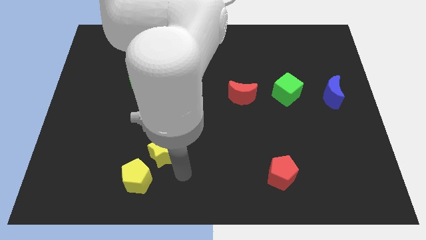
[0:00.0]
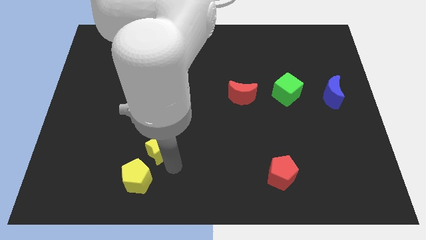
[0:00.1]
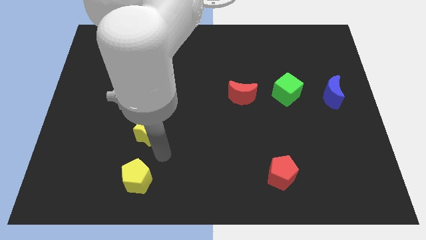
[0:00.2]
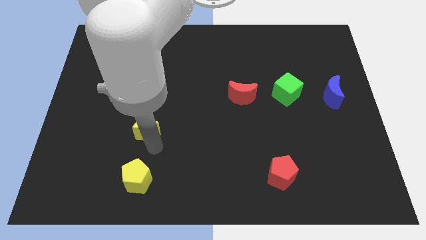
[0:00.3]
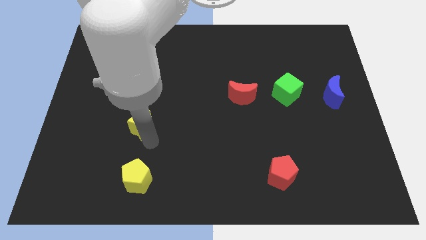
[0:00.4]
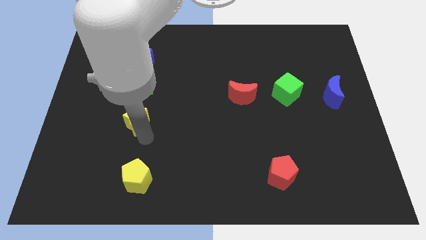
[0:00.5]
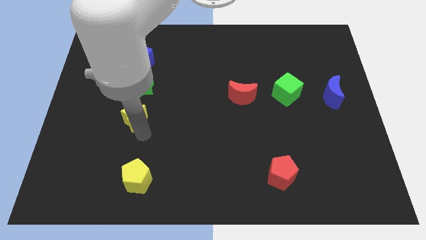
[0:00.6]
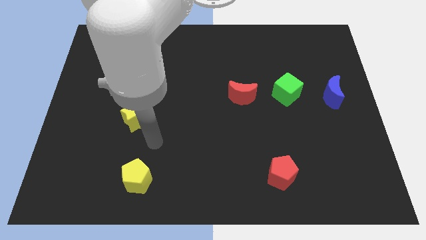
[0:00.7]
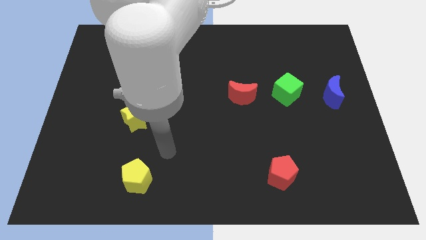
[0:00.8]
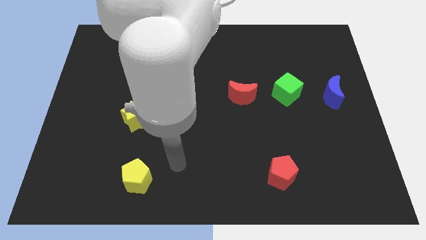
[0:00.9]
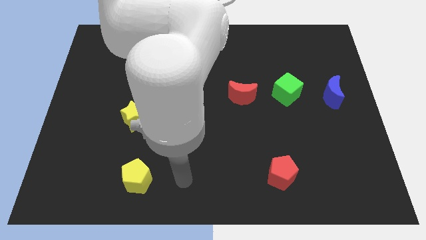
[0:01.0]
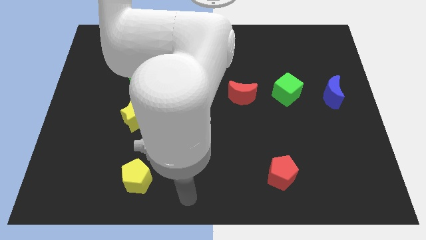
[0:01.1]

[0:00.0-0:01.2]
place yellow star vertically above the yellow pentagon

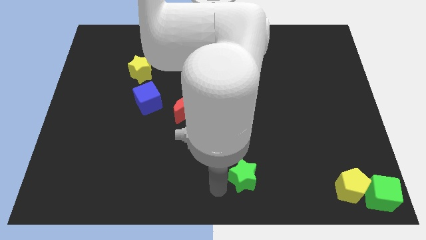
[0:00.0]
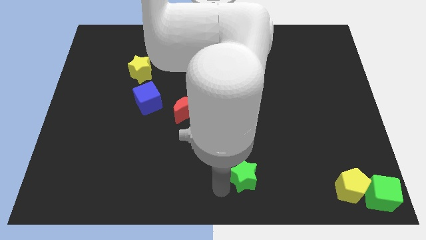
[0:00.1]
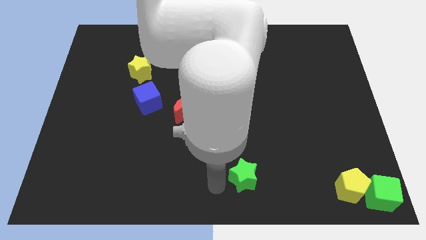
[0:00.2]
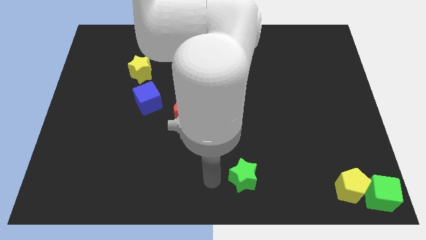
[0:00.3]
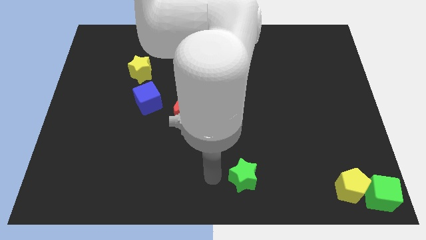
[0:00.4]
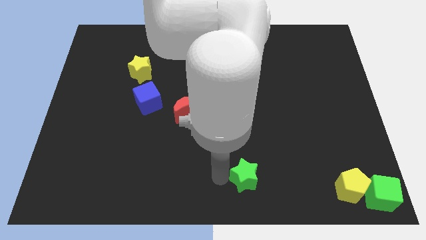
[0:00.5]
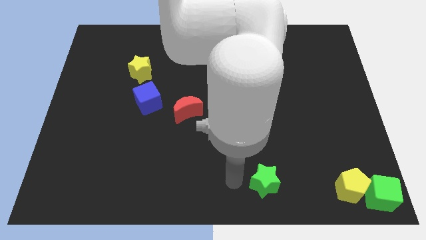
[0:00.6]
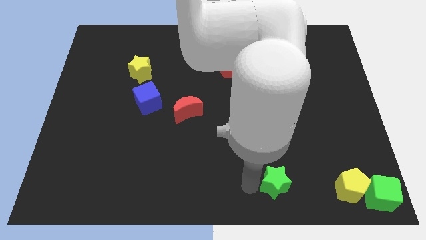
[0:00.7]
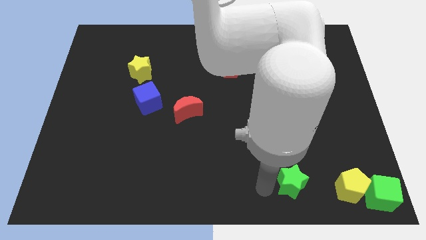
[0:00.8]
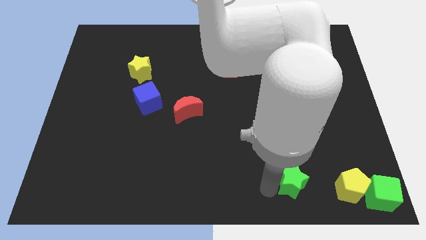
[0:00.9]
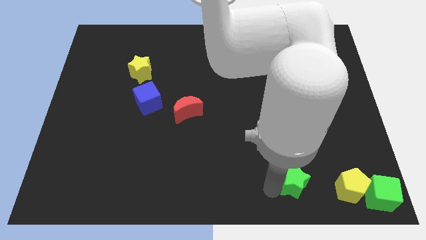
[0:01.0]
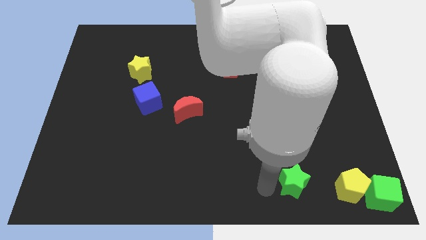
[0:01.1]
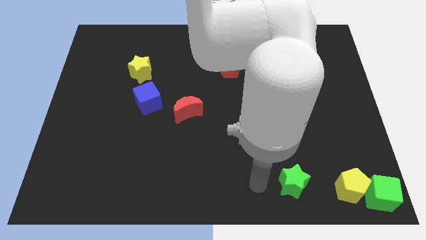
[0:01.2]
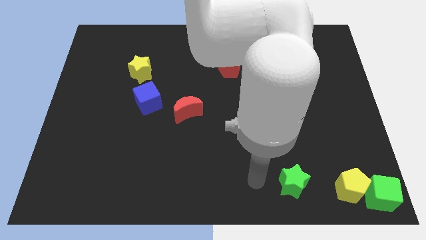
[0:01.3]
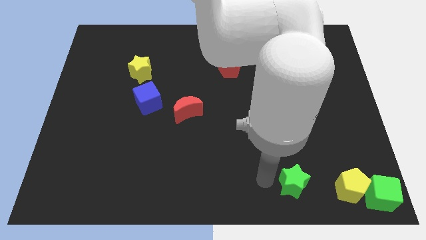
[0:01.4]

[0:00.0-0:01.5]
place the green star left to the yellow pentagon

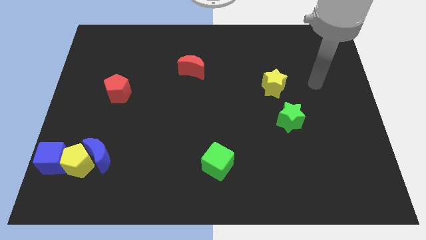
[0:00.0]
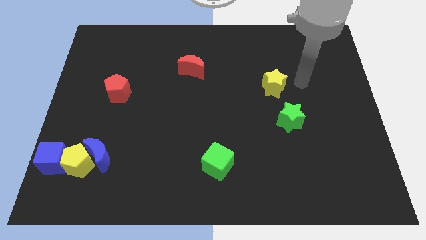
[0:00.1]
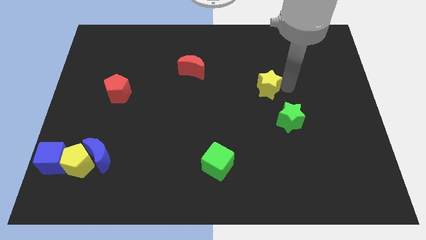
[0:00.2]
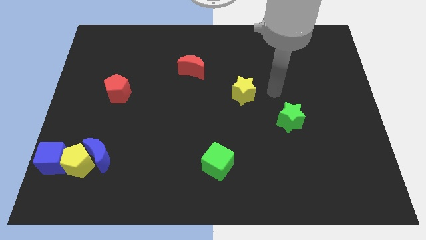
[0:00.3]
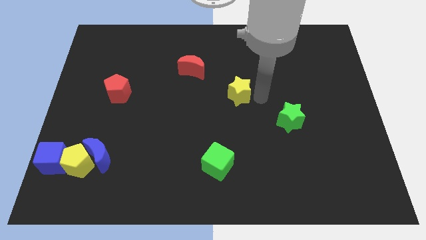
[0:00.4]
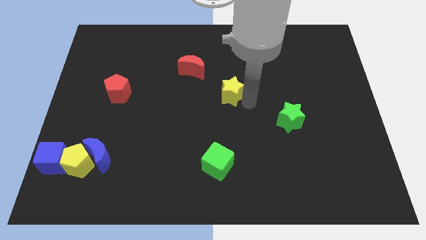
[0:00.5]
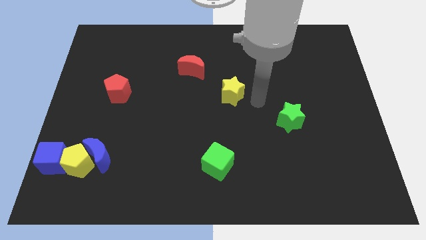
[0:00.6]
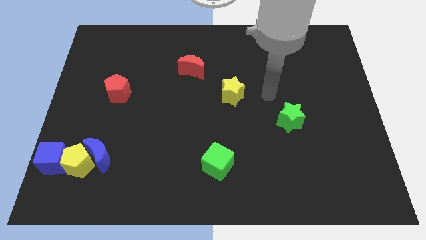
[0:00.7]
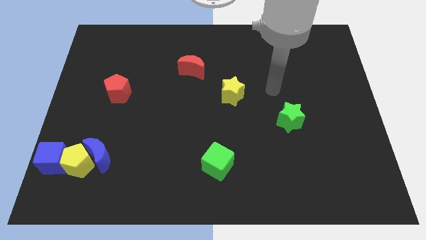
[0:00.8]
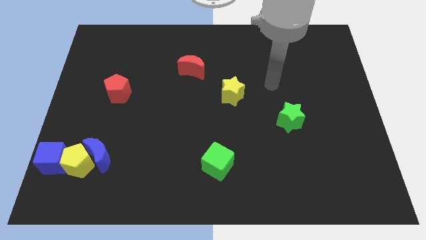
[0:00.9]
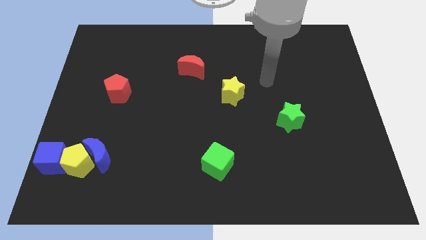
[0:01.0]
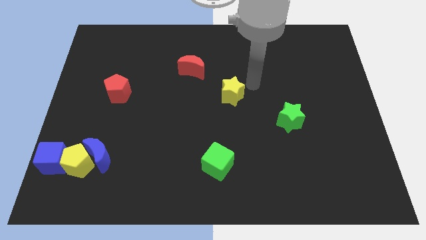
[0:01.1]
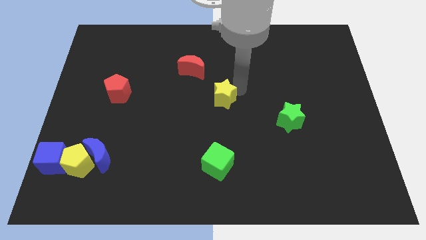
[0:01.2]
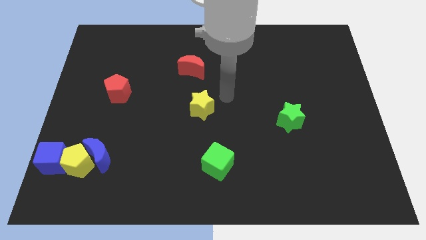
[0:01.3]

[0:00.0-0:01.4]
move the yellow star vertically at the top of the green cube

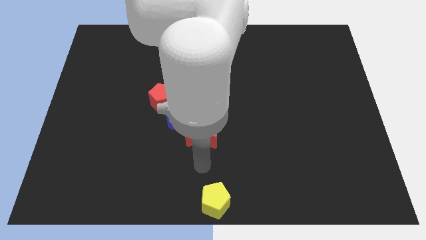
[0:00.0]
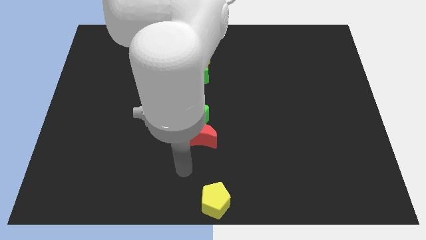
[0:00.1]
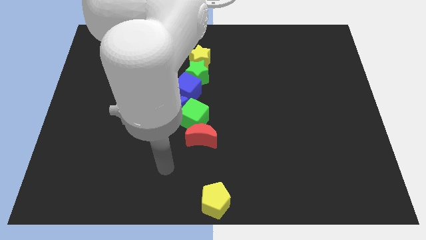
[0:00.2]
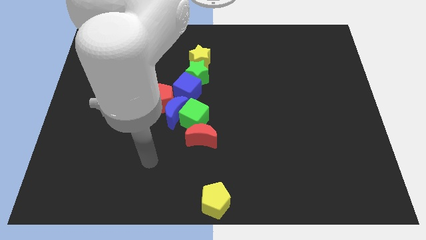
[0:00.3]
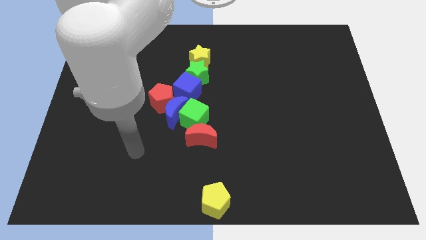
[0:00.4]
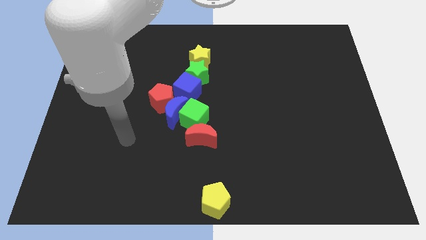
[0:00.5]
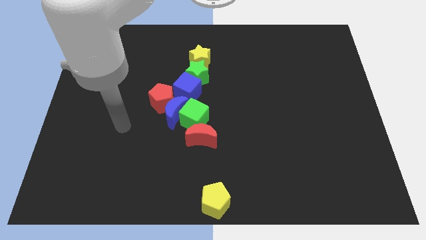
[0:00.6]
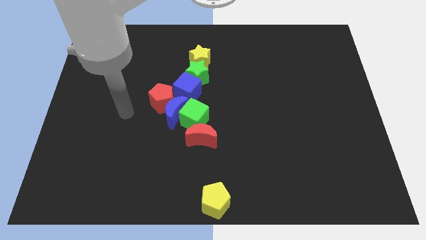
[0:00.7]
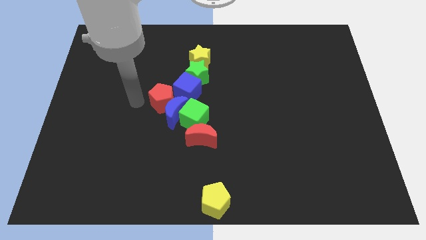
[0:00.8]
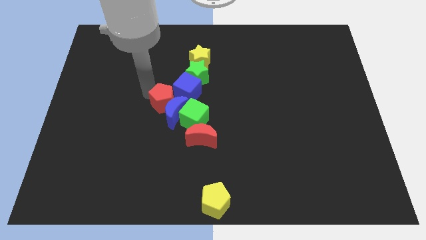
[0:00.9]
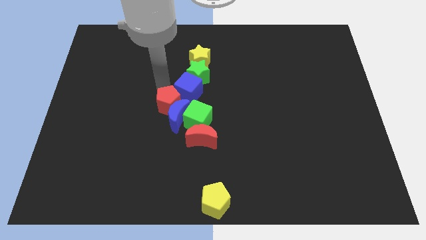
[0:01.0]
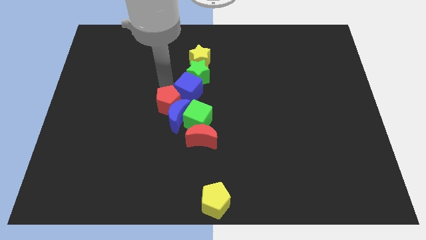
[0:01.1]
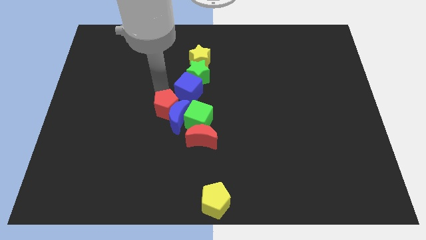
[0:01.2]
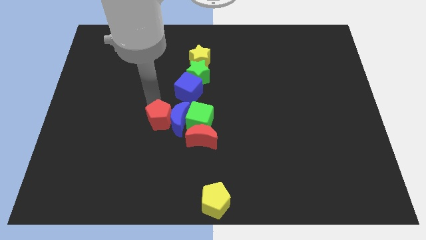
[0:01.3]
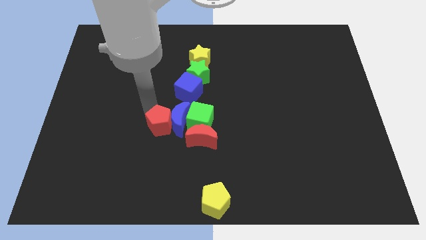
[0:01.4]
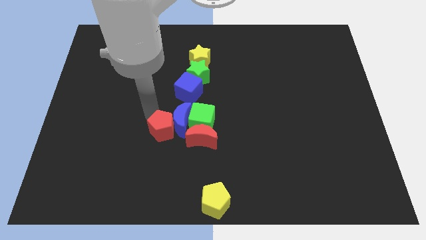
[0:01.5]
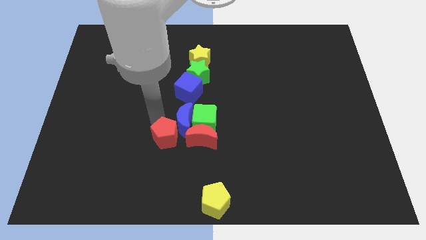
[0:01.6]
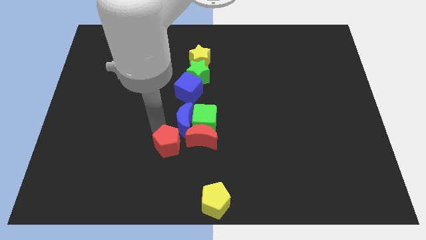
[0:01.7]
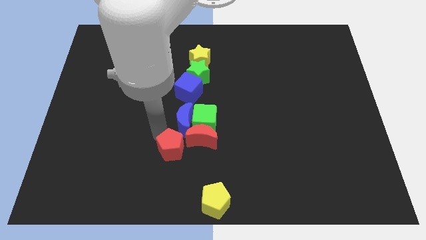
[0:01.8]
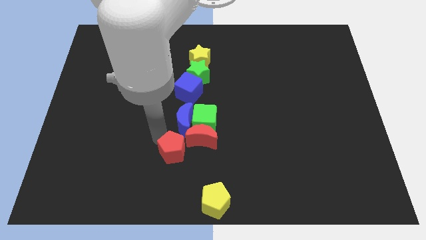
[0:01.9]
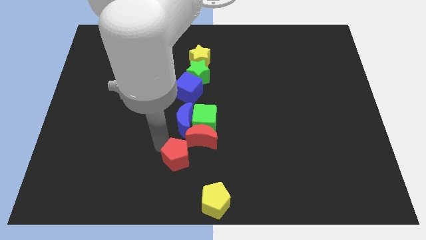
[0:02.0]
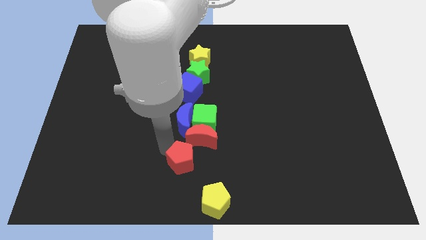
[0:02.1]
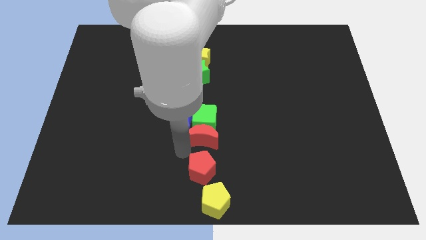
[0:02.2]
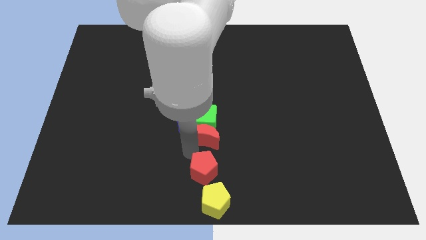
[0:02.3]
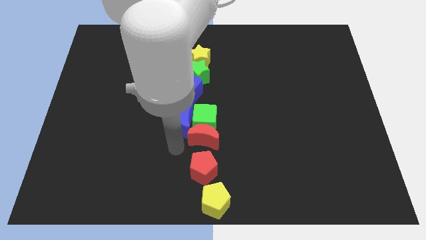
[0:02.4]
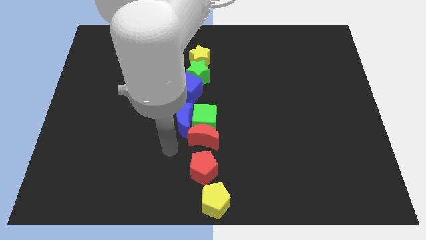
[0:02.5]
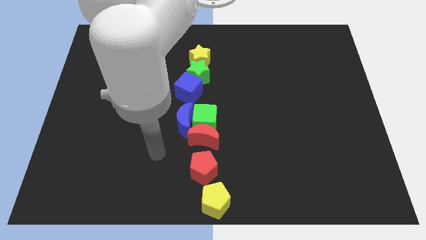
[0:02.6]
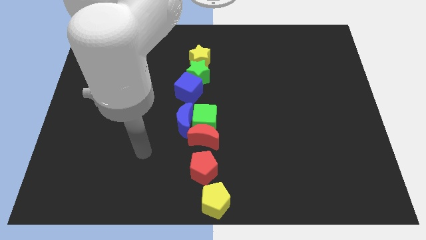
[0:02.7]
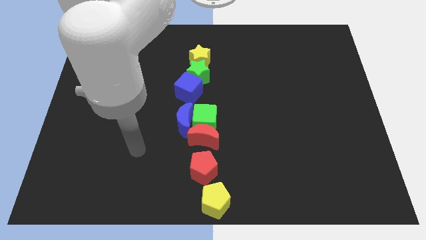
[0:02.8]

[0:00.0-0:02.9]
move red pentagon above yellow pentagon

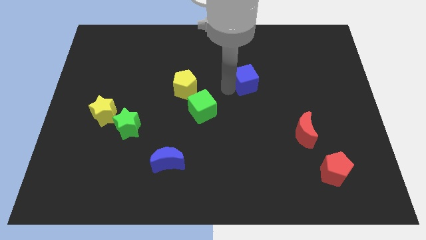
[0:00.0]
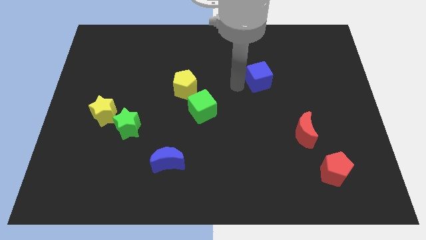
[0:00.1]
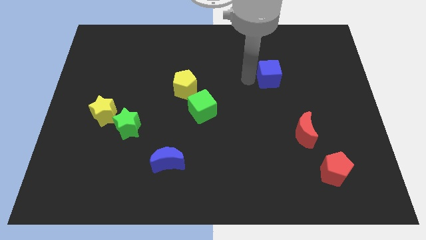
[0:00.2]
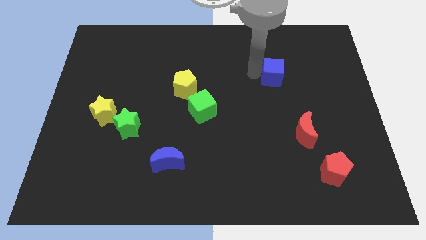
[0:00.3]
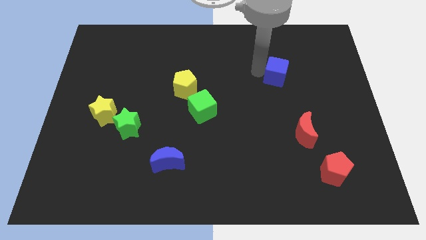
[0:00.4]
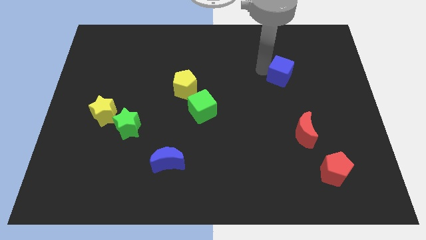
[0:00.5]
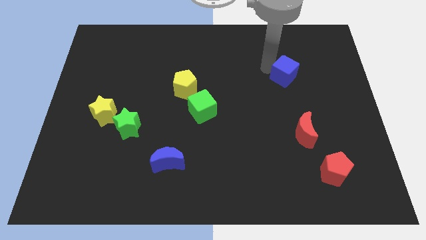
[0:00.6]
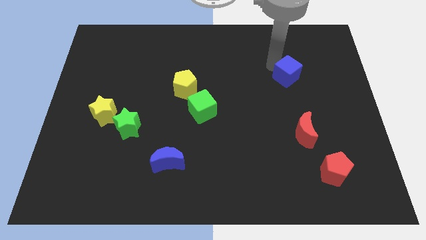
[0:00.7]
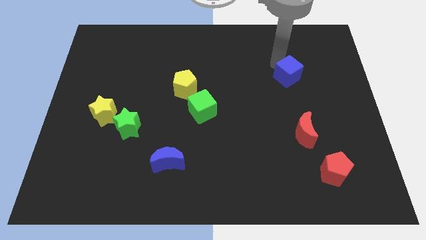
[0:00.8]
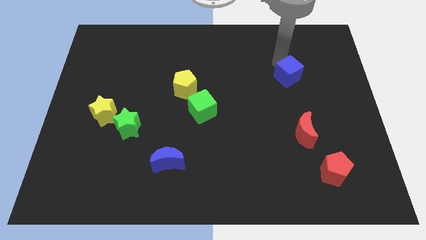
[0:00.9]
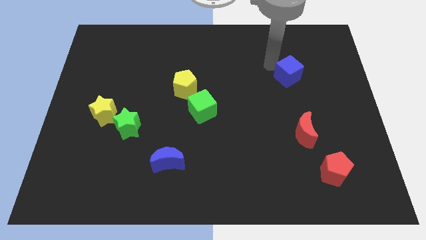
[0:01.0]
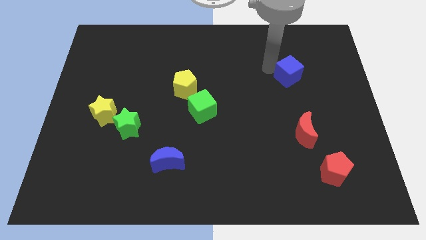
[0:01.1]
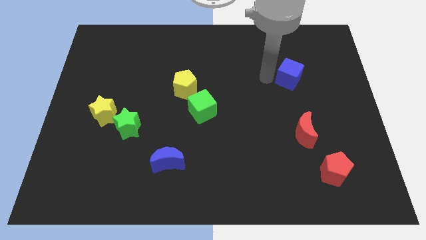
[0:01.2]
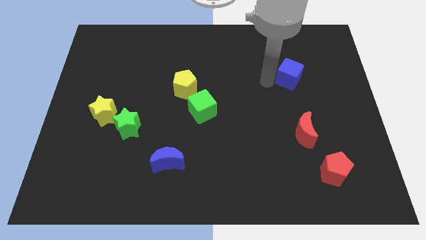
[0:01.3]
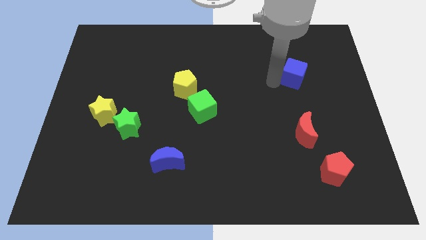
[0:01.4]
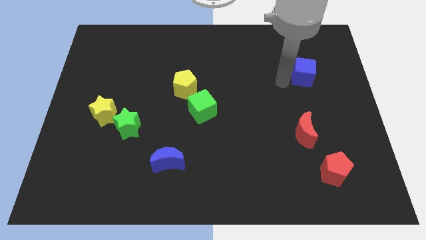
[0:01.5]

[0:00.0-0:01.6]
put the blue cube vertically above the red crescent

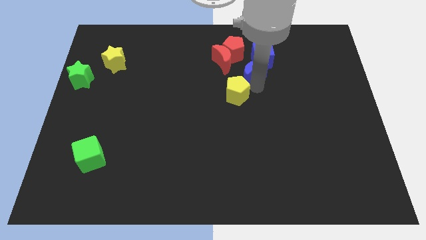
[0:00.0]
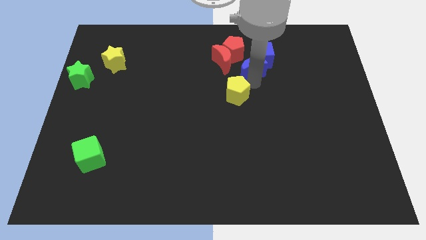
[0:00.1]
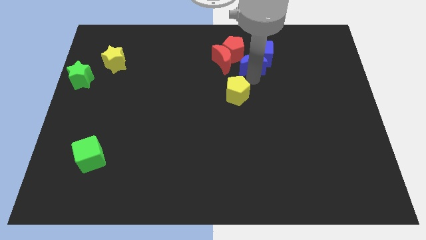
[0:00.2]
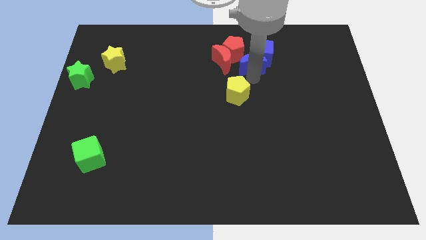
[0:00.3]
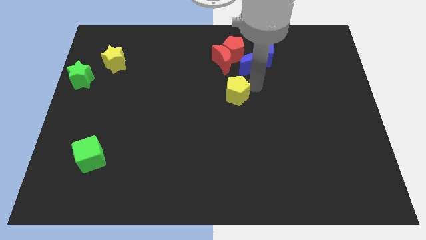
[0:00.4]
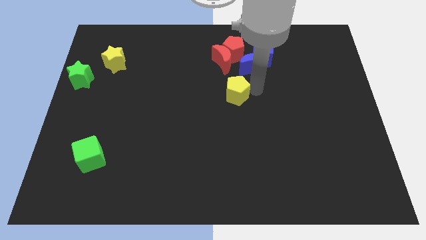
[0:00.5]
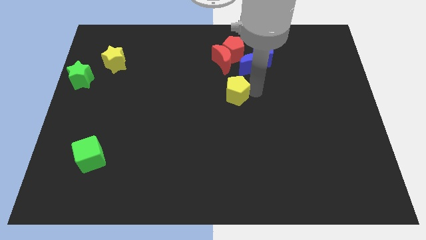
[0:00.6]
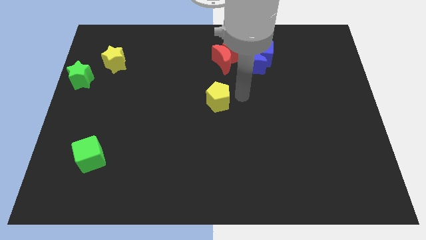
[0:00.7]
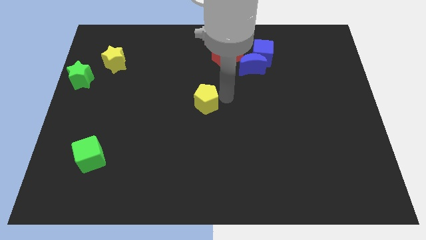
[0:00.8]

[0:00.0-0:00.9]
push the yellow pentagon to the center of the board
